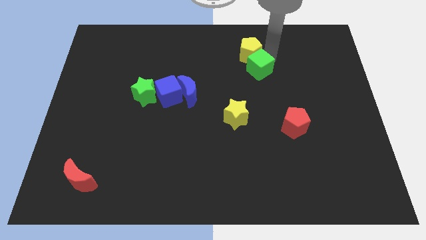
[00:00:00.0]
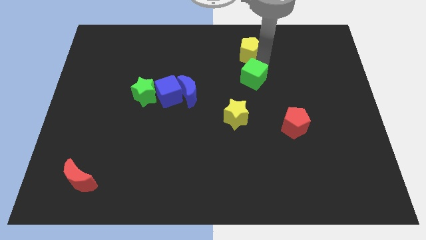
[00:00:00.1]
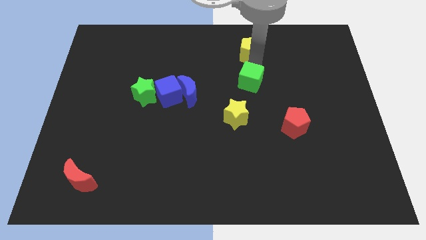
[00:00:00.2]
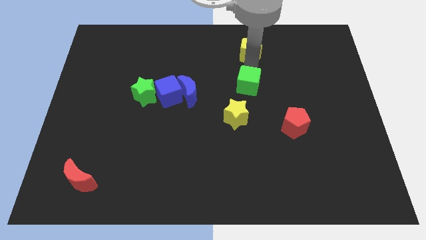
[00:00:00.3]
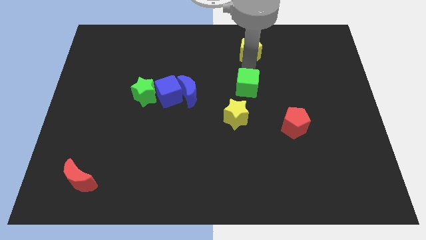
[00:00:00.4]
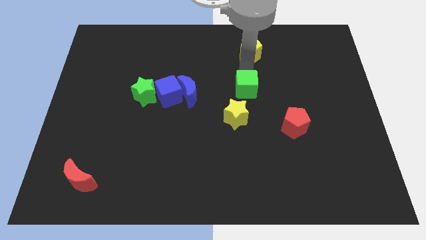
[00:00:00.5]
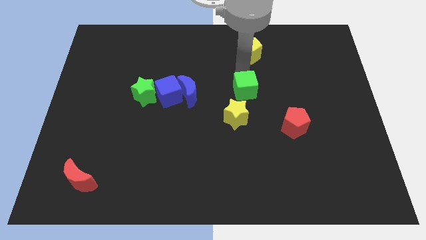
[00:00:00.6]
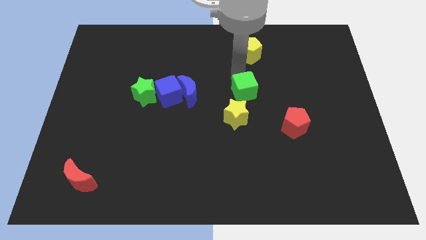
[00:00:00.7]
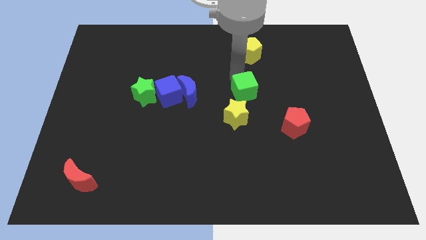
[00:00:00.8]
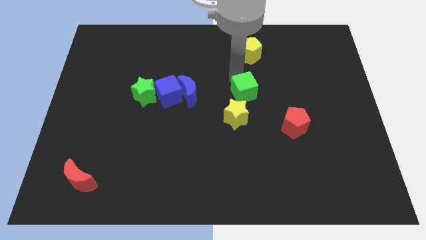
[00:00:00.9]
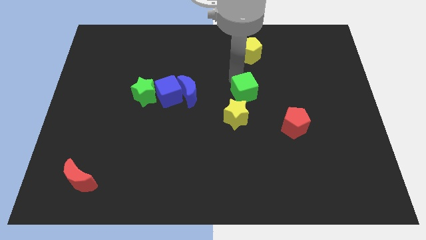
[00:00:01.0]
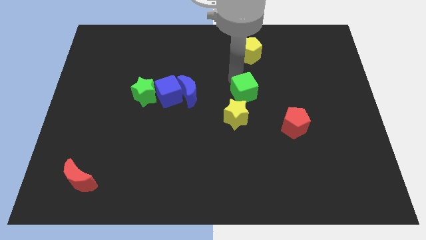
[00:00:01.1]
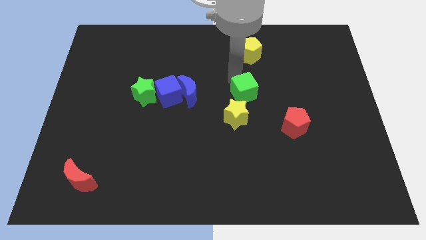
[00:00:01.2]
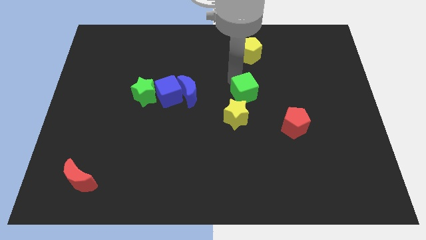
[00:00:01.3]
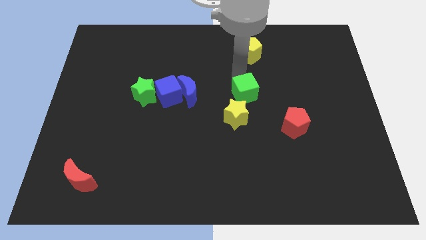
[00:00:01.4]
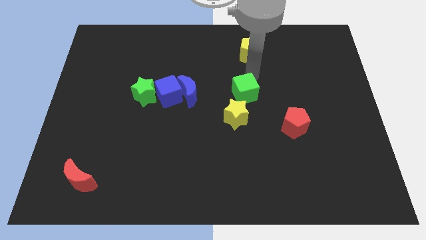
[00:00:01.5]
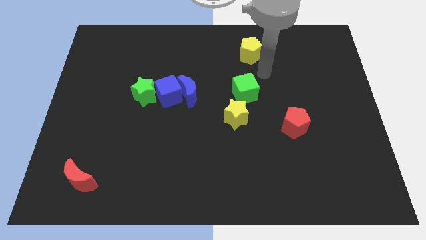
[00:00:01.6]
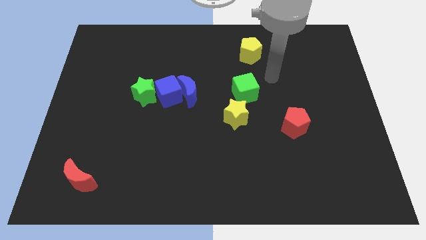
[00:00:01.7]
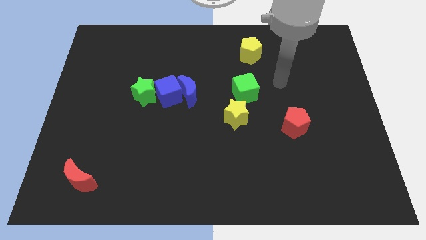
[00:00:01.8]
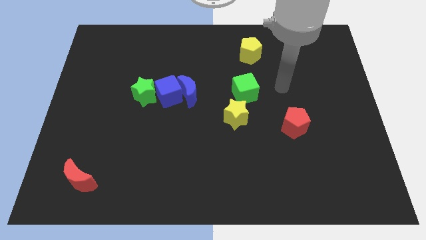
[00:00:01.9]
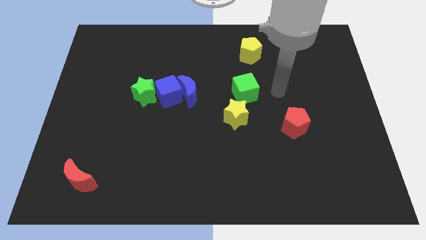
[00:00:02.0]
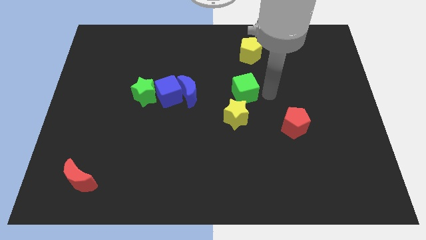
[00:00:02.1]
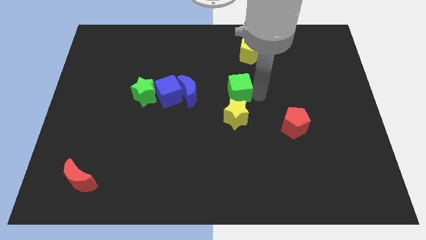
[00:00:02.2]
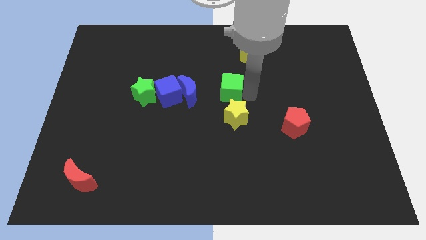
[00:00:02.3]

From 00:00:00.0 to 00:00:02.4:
slide the green cube in between yellow star and yellow pentagon

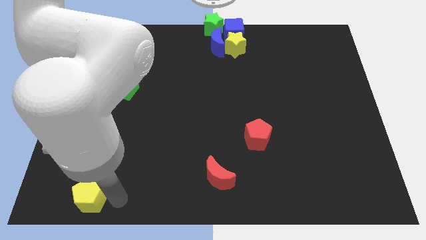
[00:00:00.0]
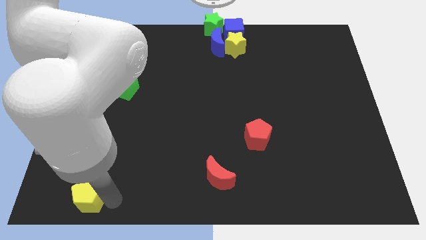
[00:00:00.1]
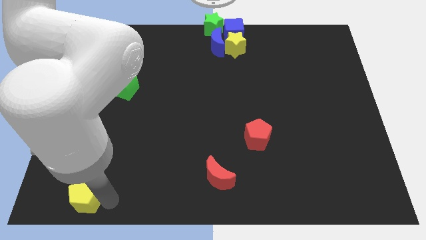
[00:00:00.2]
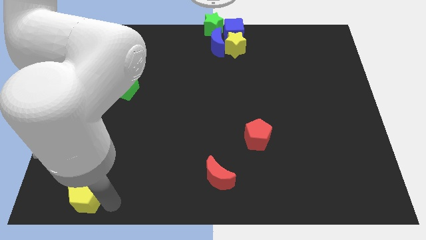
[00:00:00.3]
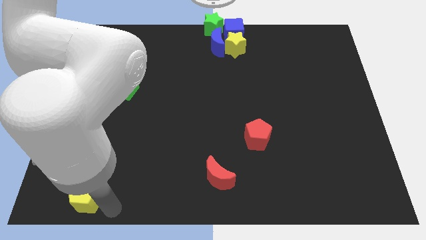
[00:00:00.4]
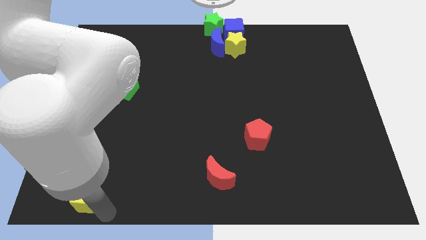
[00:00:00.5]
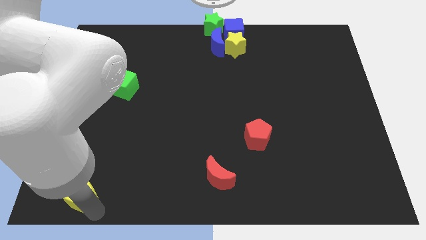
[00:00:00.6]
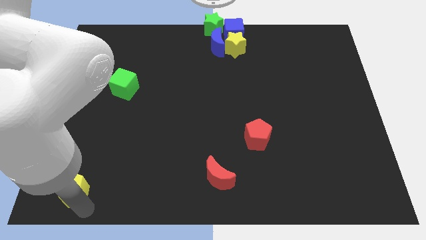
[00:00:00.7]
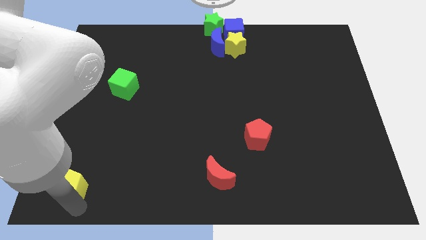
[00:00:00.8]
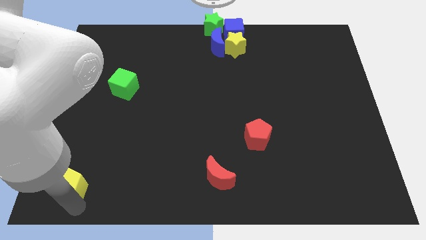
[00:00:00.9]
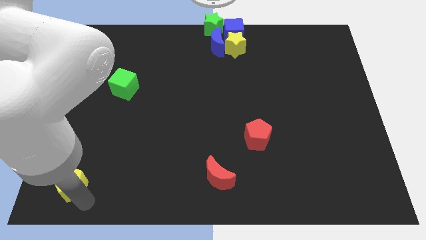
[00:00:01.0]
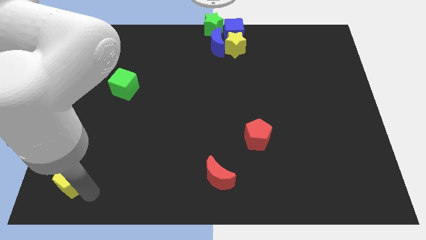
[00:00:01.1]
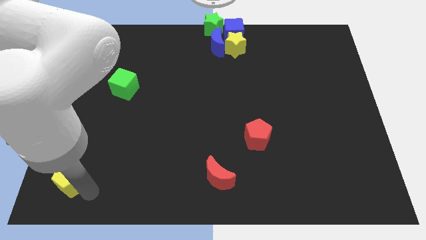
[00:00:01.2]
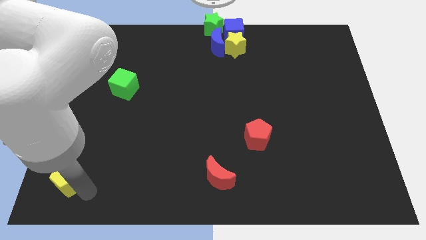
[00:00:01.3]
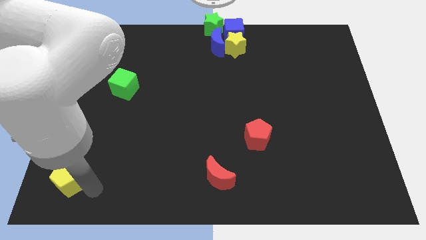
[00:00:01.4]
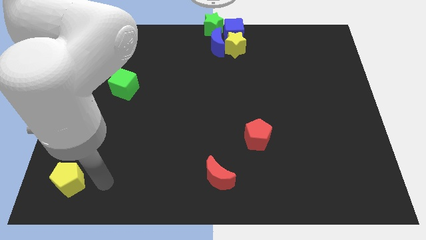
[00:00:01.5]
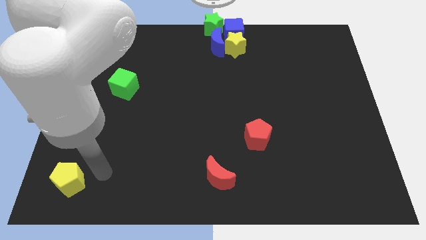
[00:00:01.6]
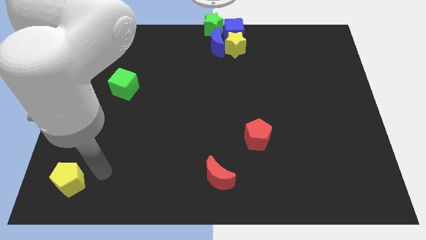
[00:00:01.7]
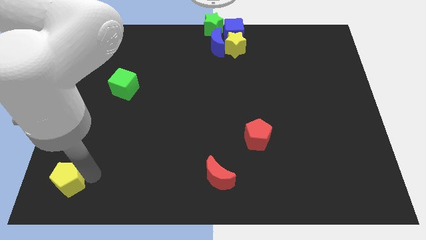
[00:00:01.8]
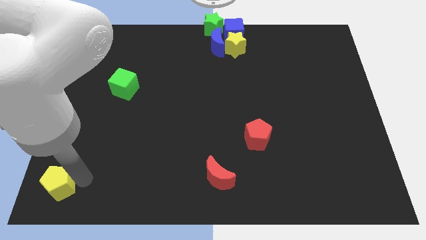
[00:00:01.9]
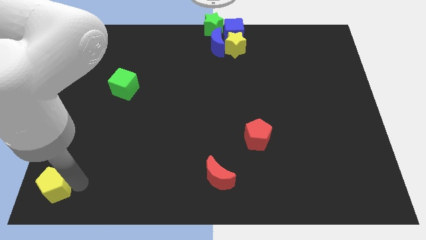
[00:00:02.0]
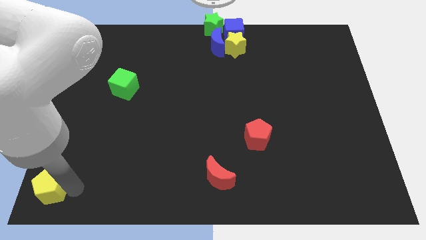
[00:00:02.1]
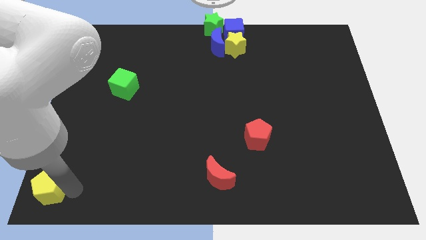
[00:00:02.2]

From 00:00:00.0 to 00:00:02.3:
move the yellow pentagon diagonally to the green cube

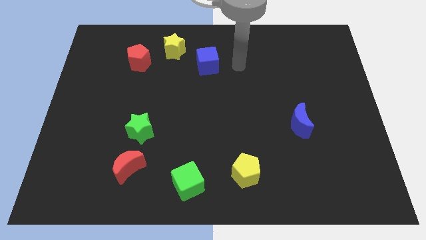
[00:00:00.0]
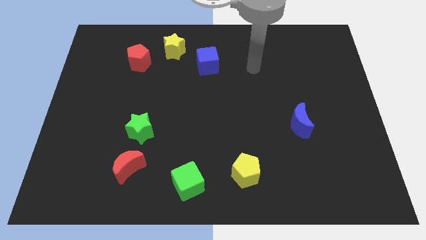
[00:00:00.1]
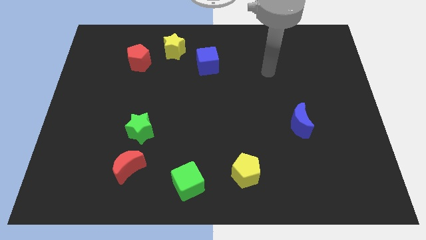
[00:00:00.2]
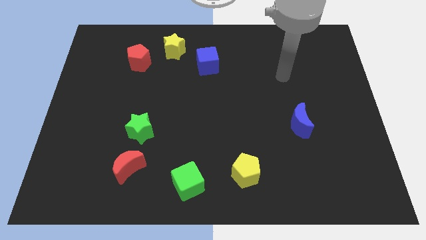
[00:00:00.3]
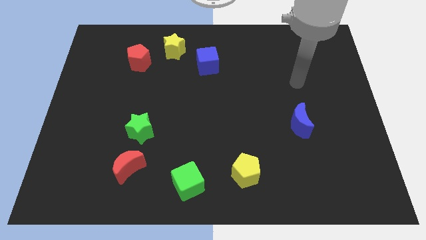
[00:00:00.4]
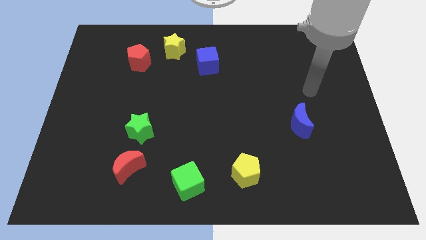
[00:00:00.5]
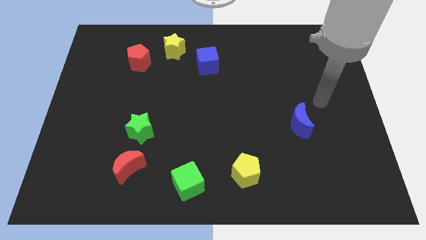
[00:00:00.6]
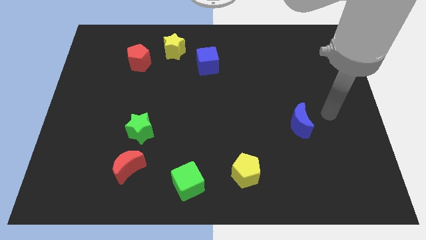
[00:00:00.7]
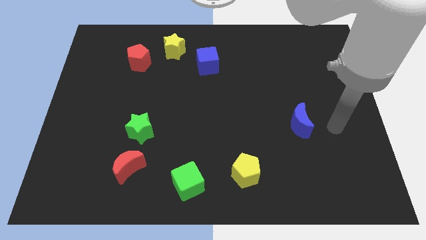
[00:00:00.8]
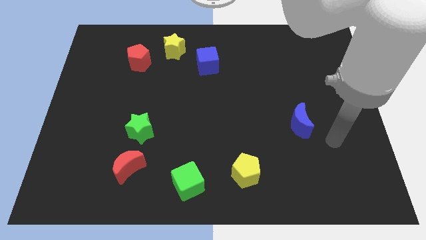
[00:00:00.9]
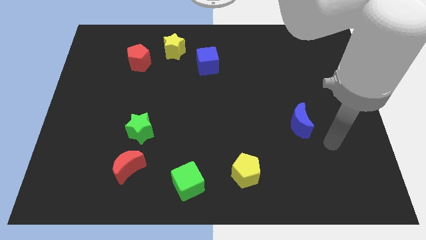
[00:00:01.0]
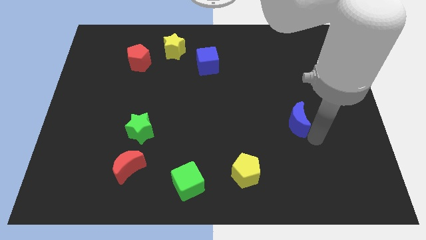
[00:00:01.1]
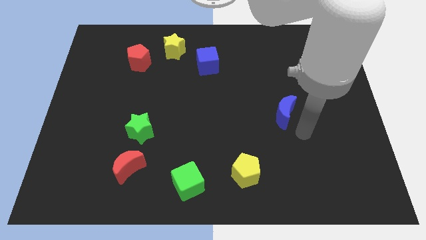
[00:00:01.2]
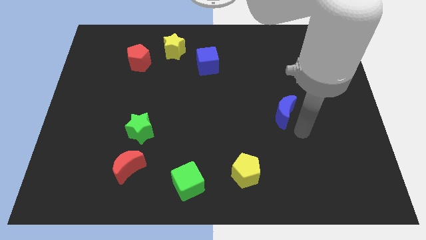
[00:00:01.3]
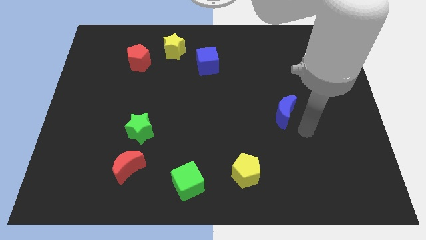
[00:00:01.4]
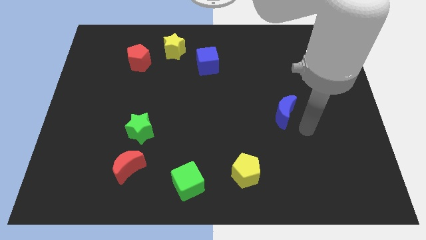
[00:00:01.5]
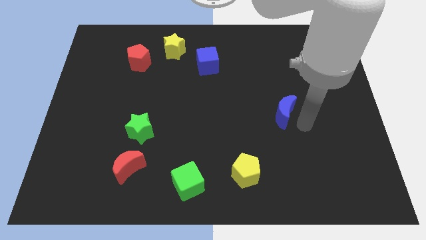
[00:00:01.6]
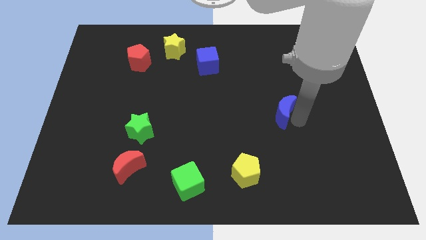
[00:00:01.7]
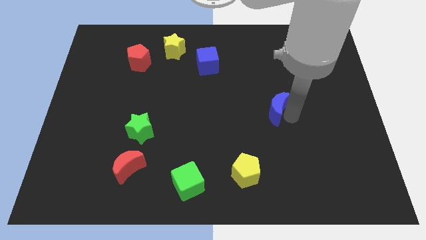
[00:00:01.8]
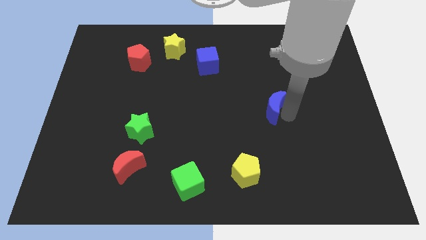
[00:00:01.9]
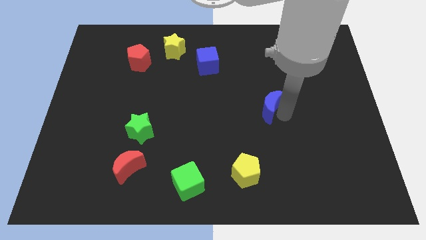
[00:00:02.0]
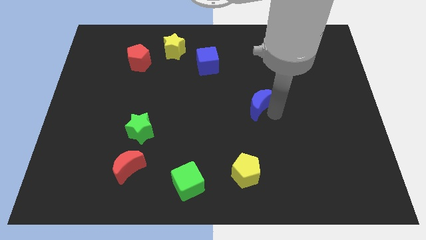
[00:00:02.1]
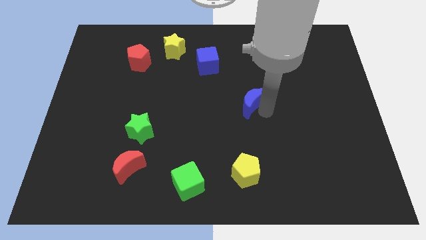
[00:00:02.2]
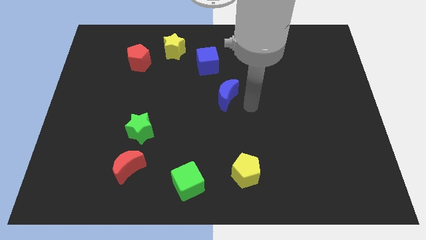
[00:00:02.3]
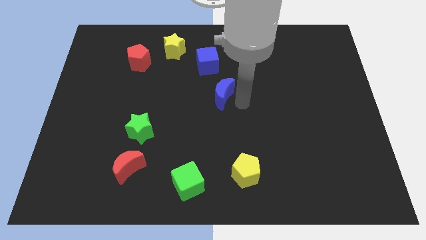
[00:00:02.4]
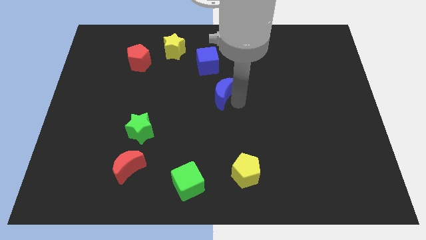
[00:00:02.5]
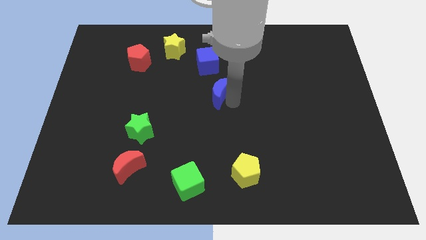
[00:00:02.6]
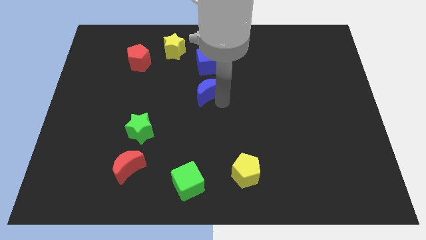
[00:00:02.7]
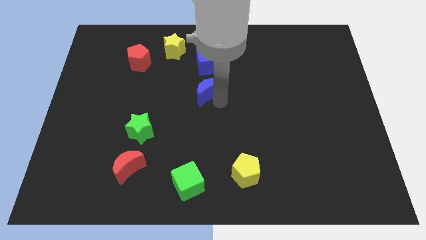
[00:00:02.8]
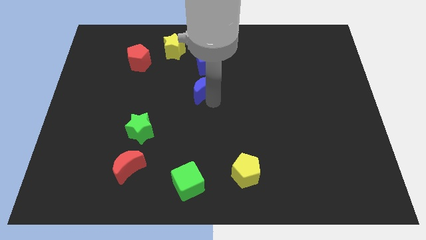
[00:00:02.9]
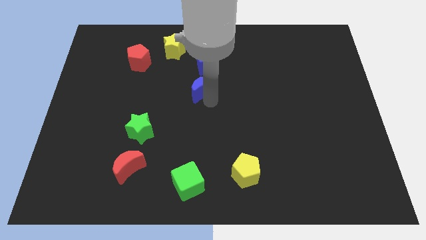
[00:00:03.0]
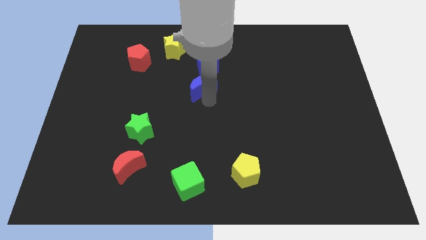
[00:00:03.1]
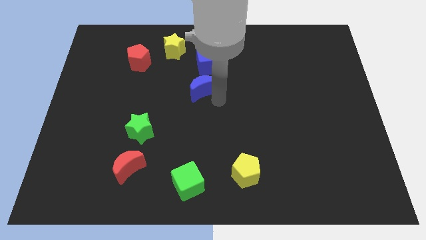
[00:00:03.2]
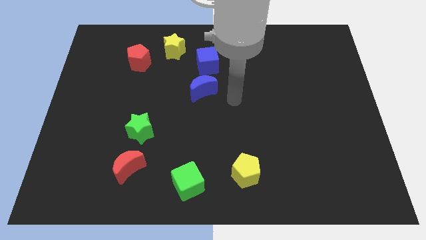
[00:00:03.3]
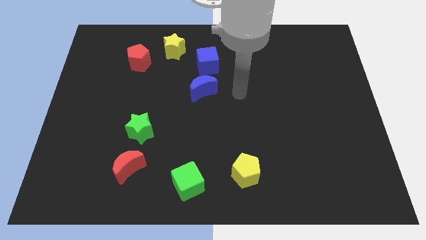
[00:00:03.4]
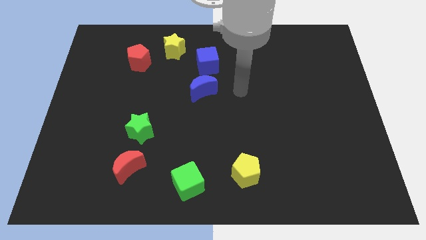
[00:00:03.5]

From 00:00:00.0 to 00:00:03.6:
place the blue crescent below the blue cube

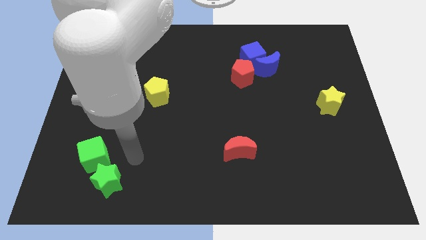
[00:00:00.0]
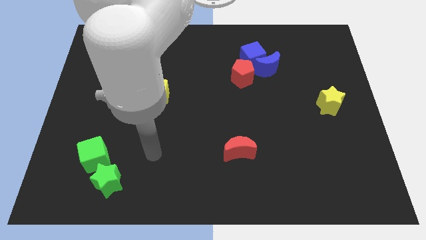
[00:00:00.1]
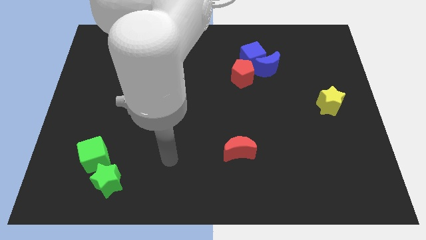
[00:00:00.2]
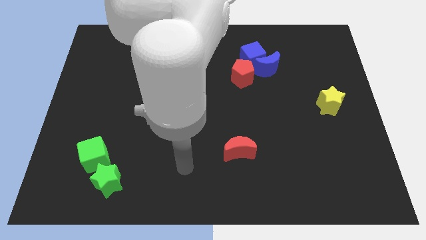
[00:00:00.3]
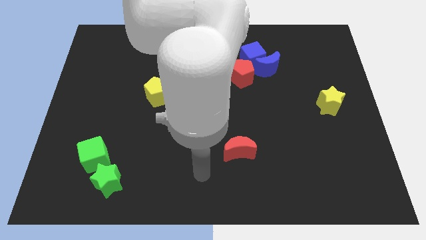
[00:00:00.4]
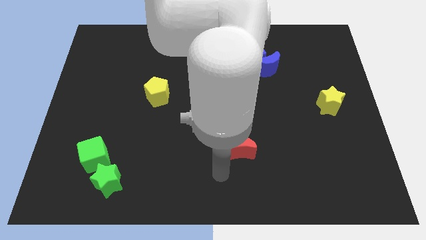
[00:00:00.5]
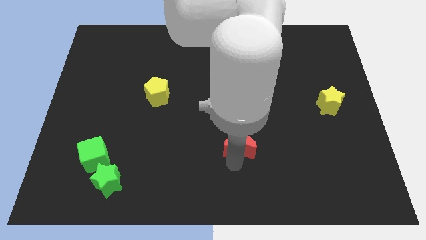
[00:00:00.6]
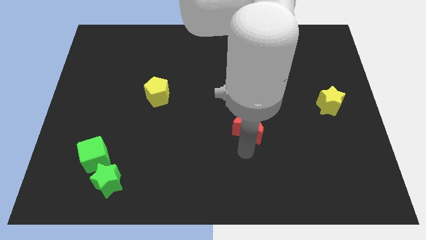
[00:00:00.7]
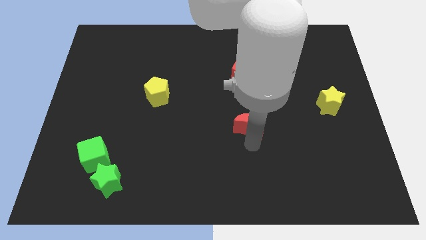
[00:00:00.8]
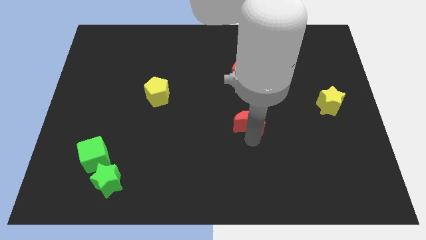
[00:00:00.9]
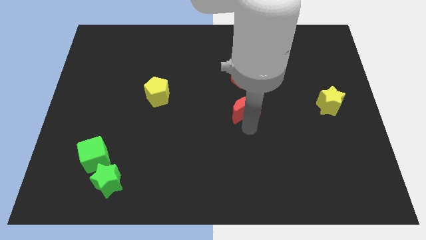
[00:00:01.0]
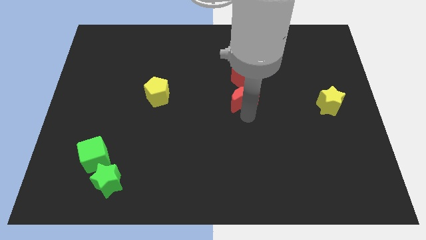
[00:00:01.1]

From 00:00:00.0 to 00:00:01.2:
push the red moon towards the red pentagon
